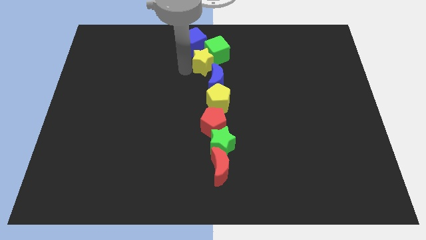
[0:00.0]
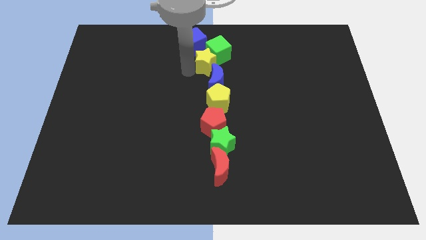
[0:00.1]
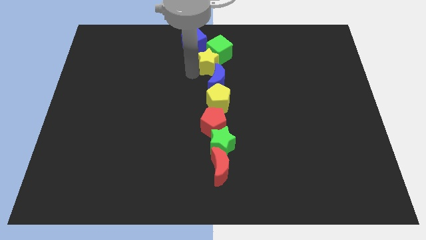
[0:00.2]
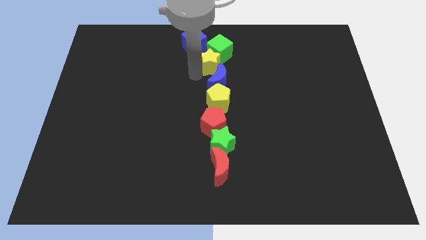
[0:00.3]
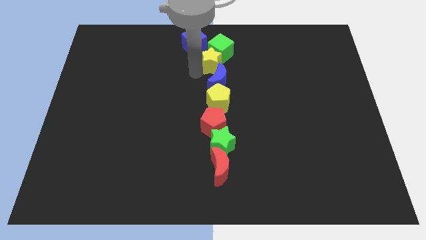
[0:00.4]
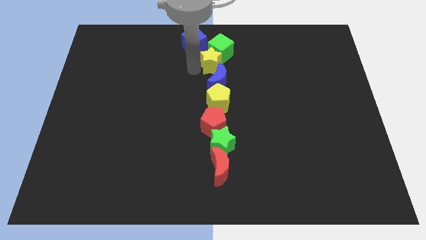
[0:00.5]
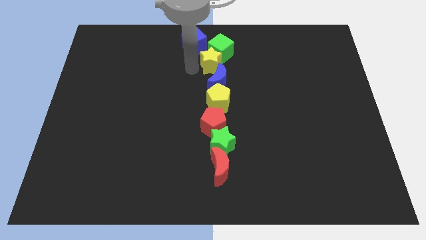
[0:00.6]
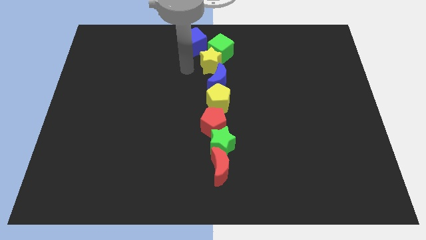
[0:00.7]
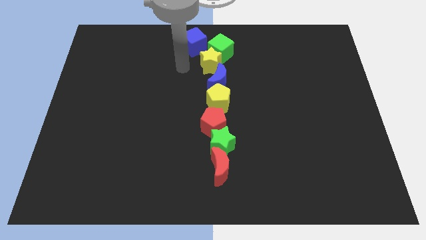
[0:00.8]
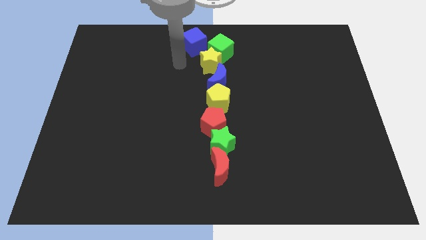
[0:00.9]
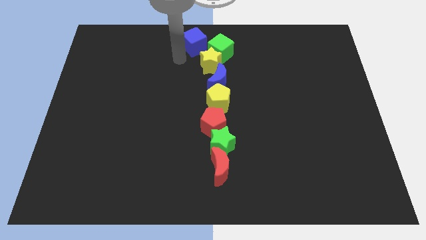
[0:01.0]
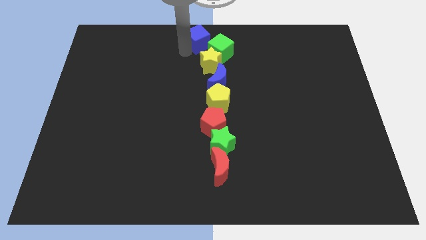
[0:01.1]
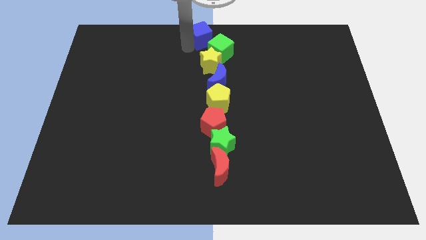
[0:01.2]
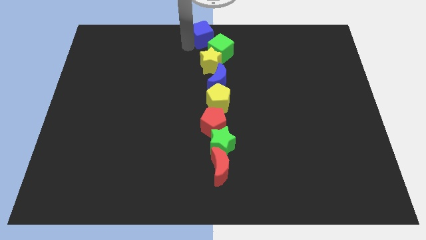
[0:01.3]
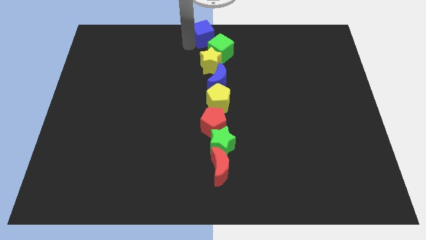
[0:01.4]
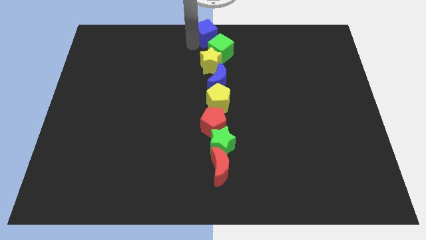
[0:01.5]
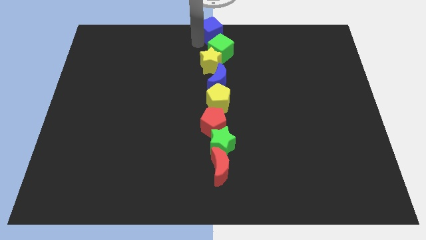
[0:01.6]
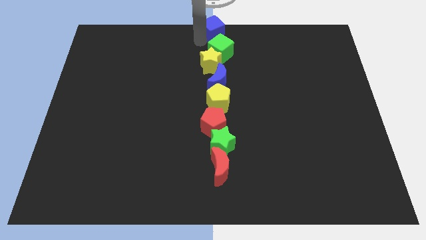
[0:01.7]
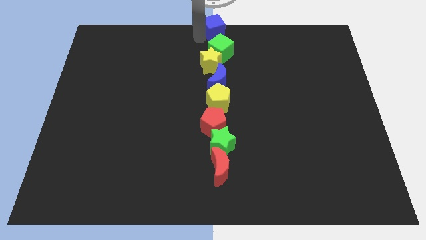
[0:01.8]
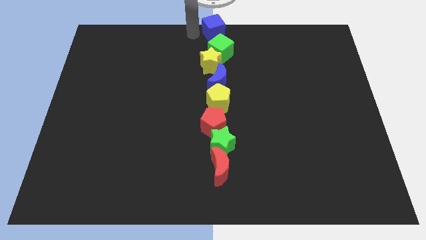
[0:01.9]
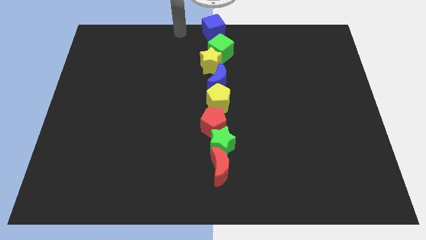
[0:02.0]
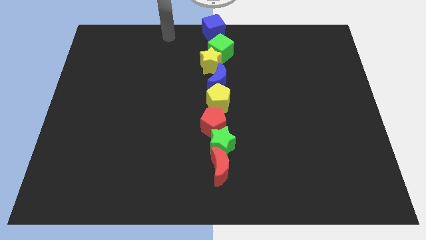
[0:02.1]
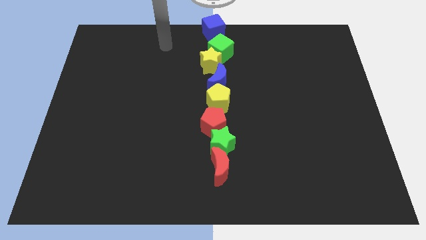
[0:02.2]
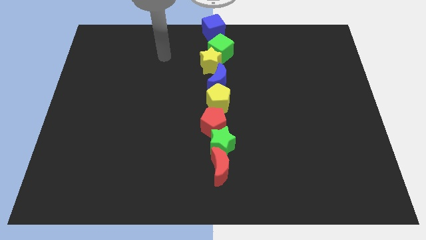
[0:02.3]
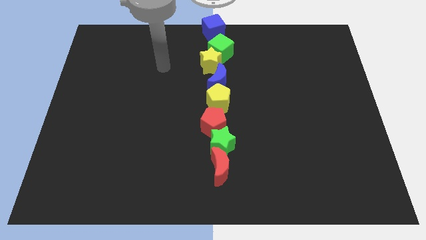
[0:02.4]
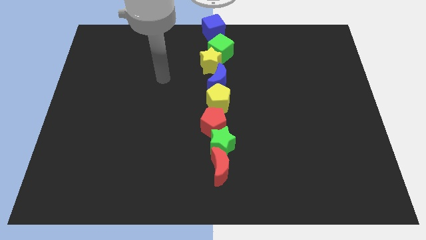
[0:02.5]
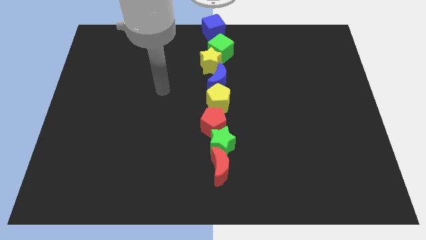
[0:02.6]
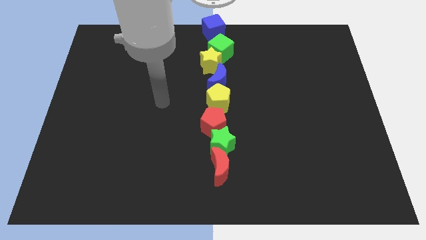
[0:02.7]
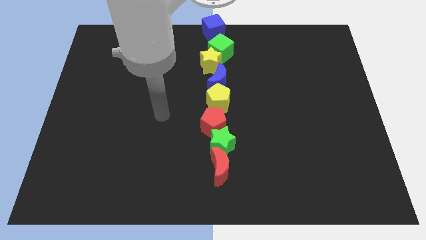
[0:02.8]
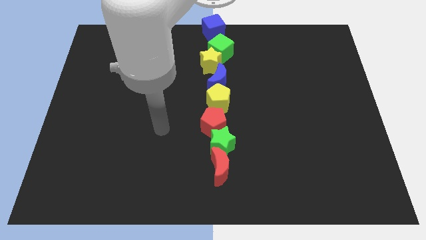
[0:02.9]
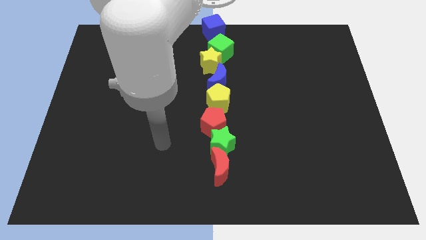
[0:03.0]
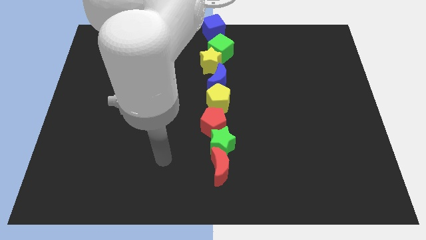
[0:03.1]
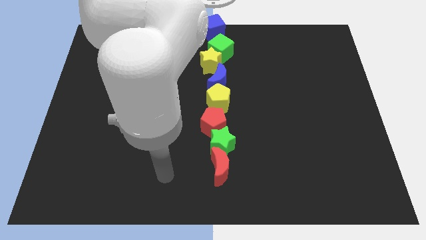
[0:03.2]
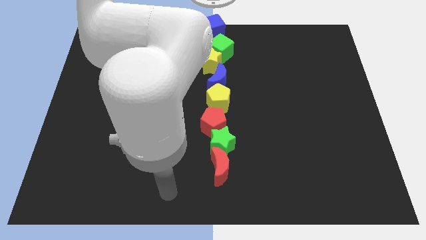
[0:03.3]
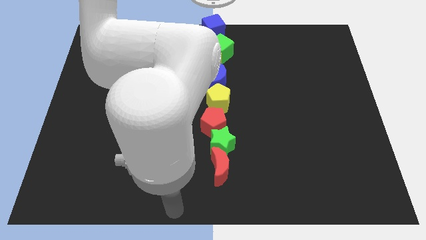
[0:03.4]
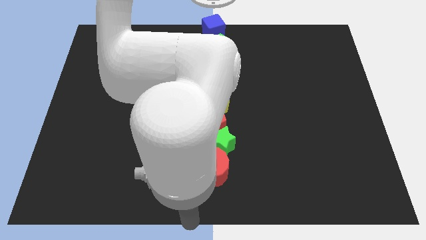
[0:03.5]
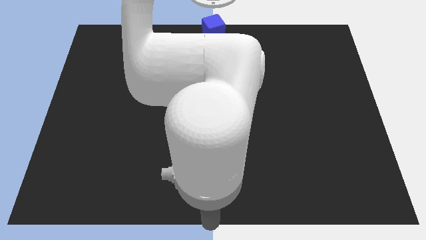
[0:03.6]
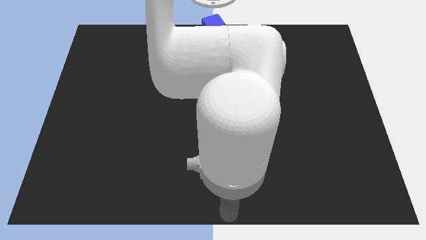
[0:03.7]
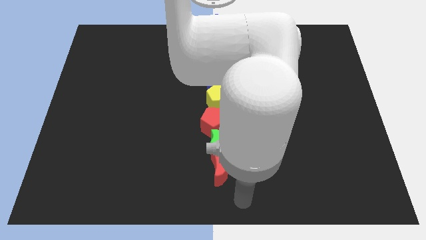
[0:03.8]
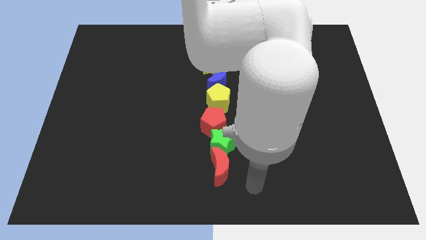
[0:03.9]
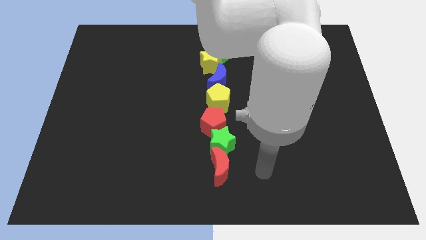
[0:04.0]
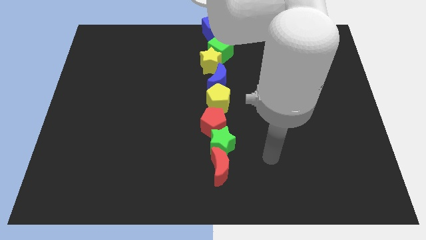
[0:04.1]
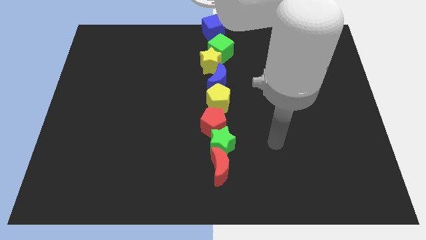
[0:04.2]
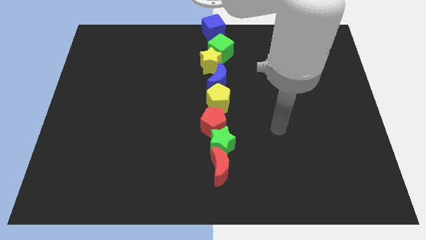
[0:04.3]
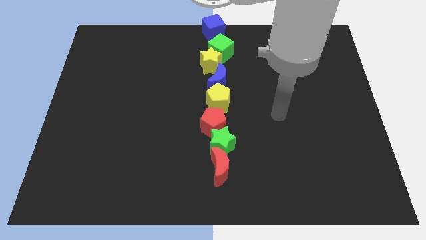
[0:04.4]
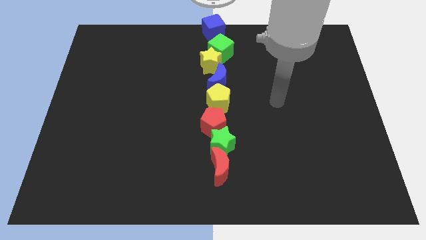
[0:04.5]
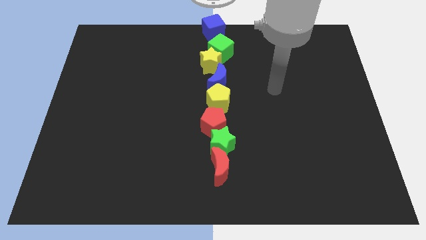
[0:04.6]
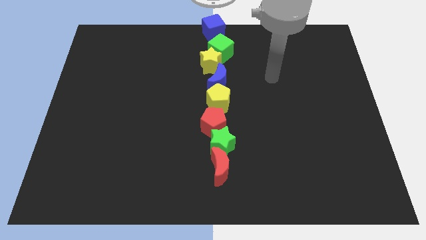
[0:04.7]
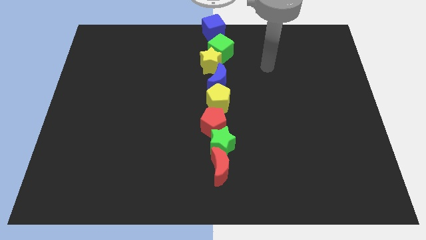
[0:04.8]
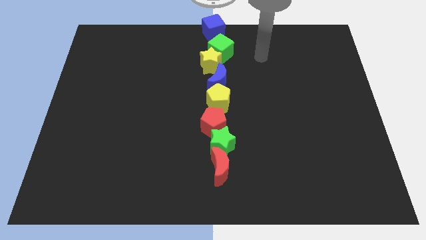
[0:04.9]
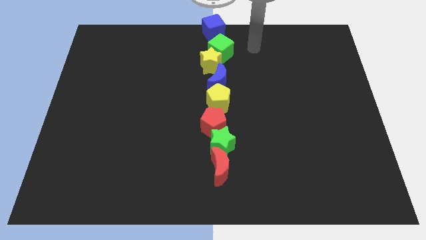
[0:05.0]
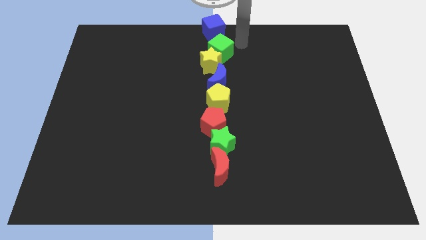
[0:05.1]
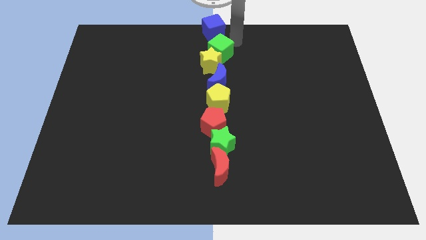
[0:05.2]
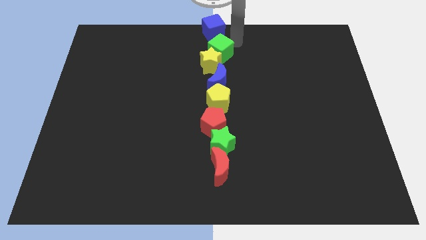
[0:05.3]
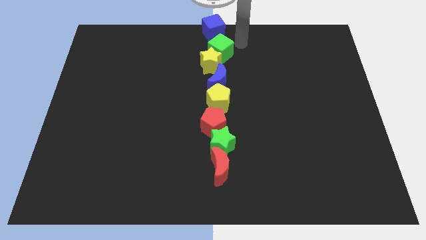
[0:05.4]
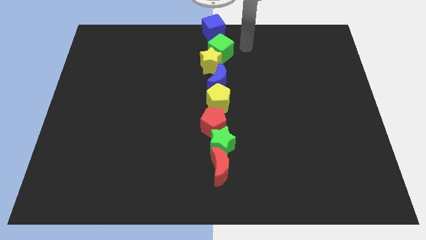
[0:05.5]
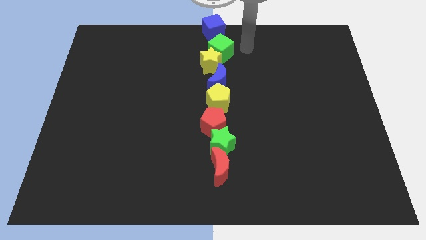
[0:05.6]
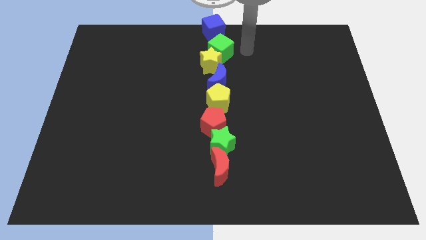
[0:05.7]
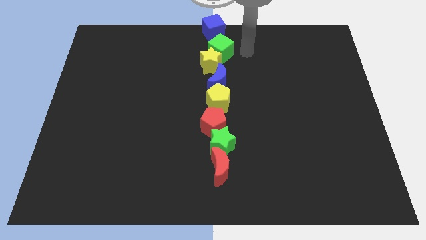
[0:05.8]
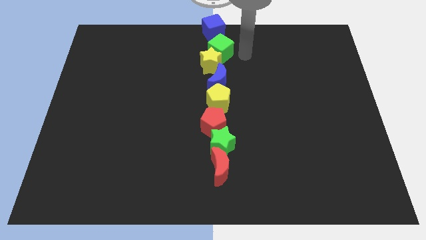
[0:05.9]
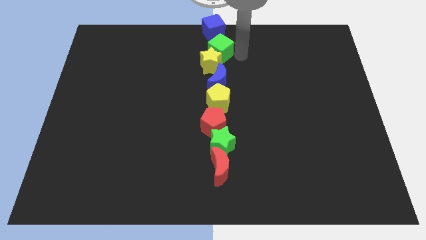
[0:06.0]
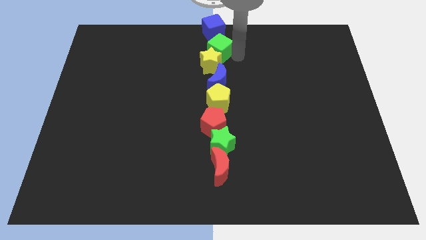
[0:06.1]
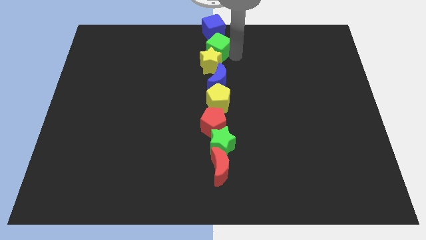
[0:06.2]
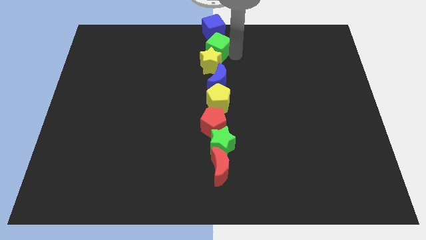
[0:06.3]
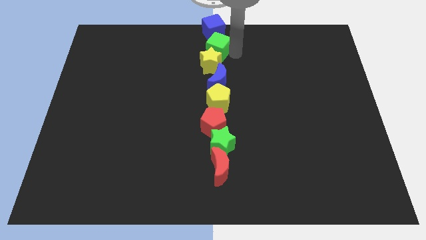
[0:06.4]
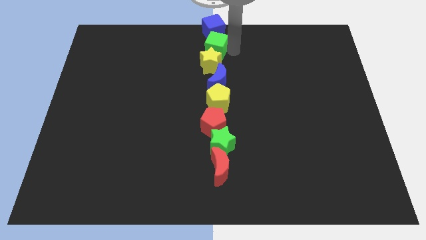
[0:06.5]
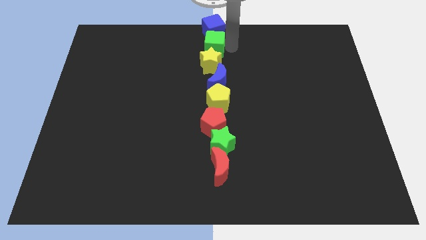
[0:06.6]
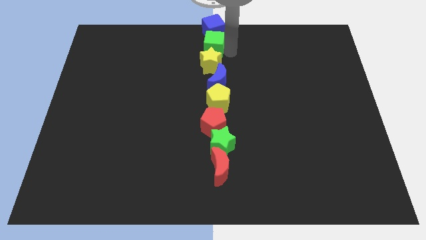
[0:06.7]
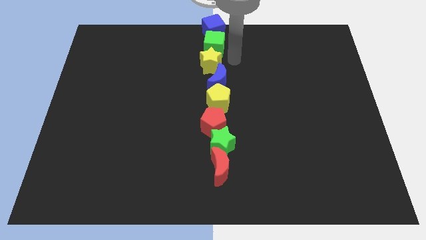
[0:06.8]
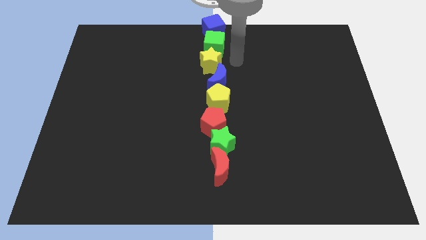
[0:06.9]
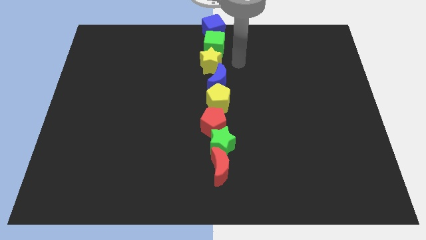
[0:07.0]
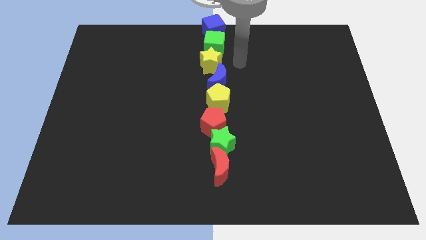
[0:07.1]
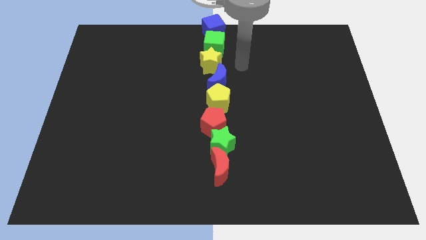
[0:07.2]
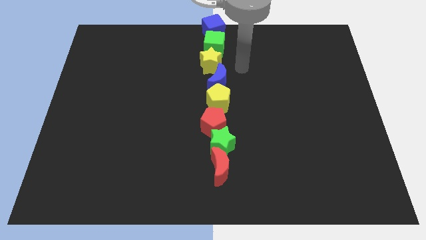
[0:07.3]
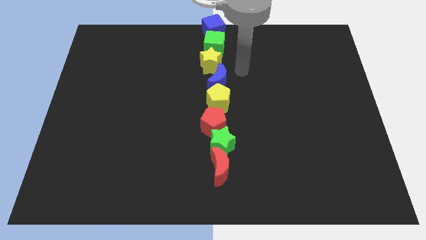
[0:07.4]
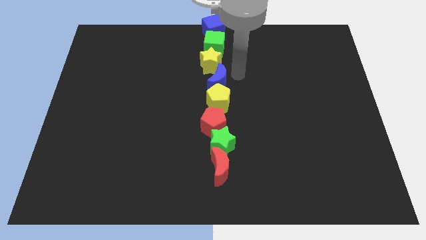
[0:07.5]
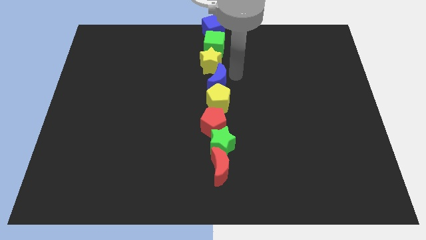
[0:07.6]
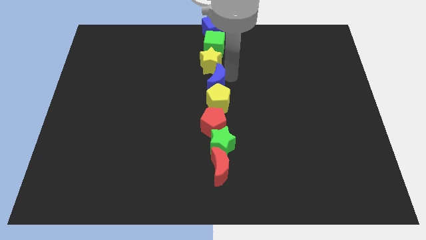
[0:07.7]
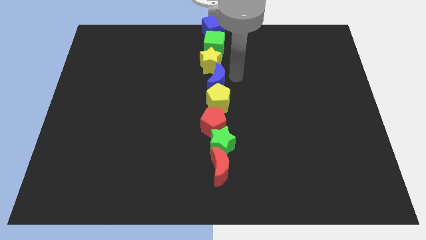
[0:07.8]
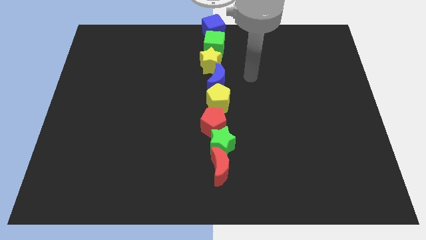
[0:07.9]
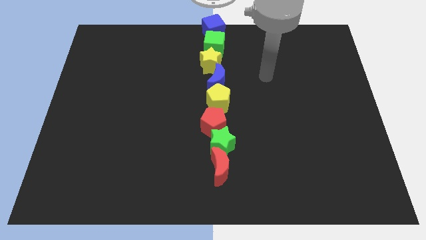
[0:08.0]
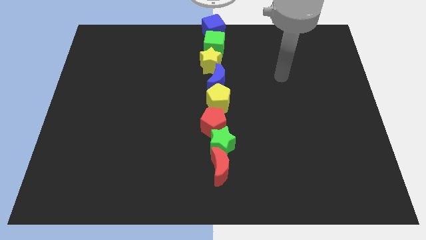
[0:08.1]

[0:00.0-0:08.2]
adjust the group of blocks to form a vertical line

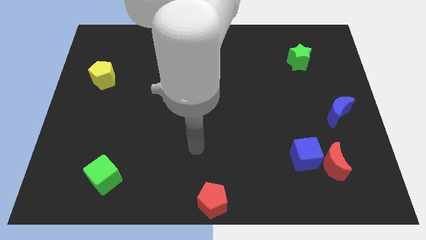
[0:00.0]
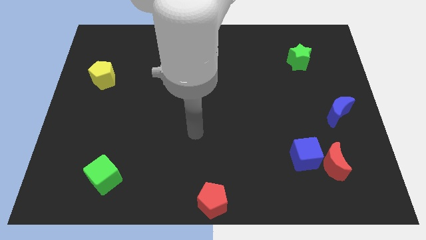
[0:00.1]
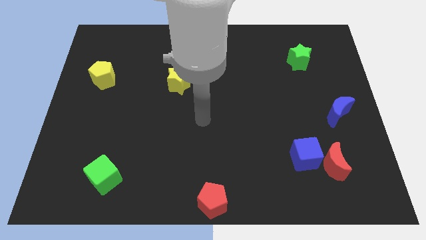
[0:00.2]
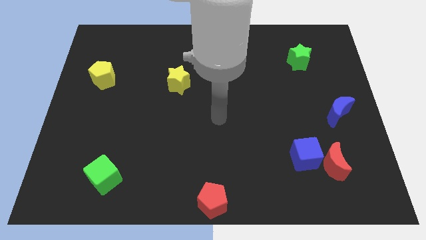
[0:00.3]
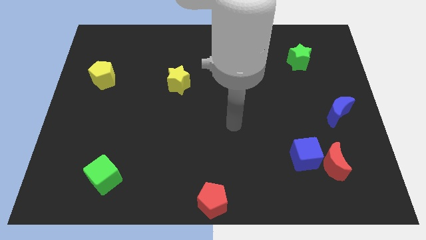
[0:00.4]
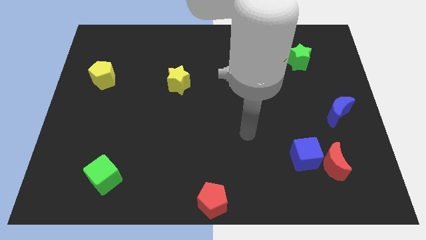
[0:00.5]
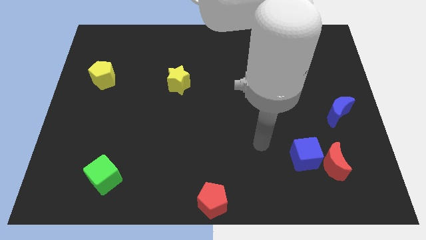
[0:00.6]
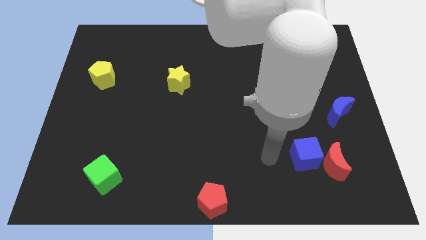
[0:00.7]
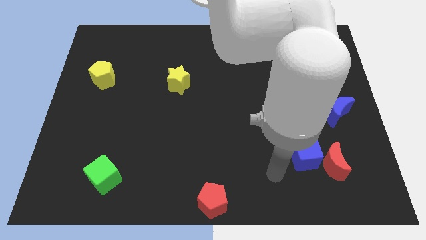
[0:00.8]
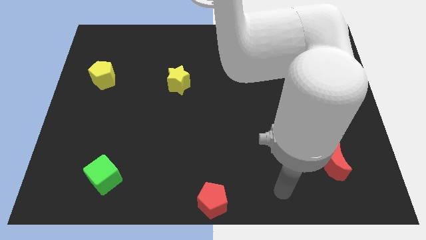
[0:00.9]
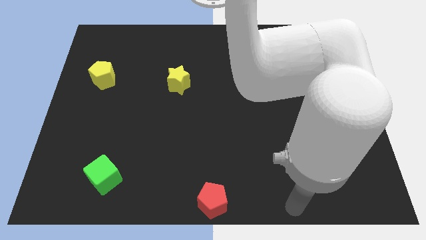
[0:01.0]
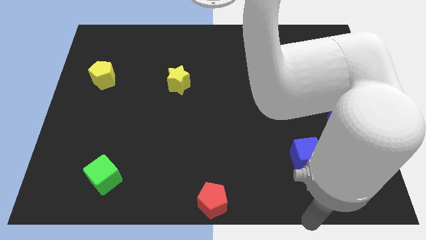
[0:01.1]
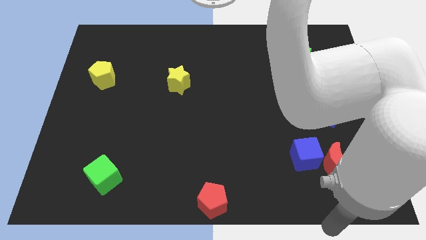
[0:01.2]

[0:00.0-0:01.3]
move your hand to the bottom side
